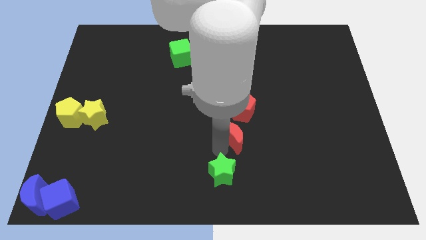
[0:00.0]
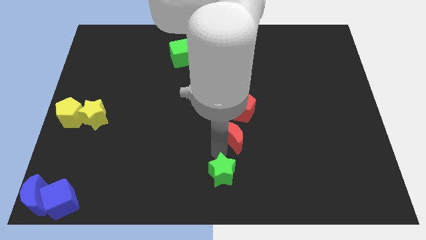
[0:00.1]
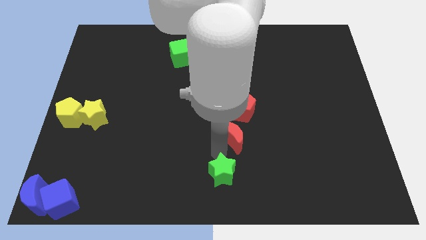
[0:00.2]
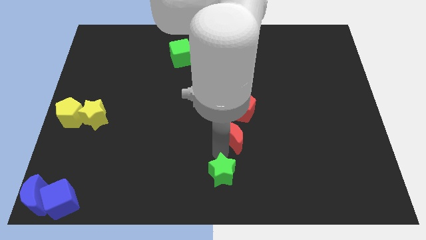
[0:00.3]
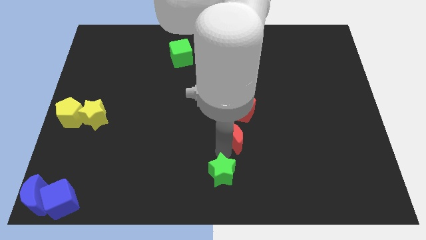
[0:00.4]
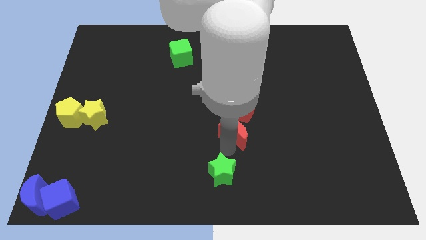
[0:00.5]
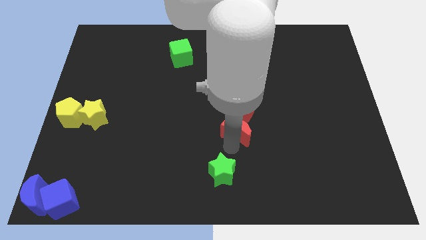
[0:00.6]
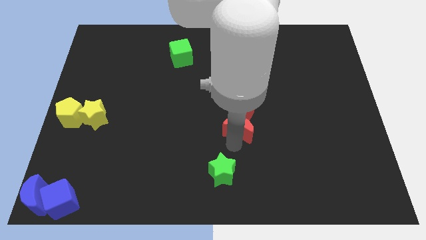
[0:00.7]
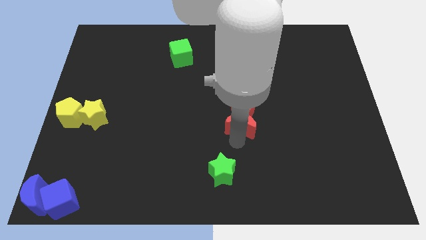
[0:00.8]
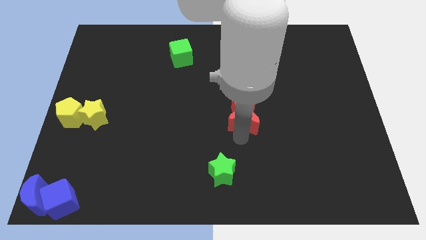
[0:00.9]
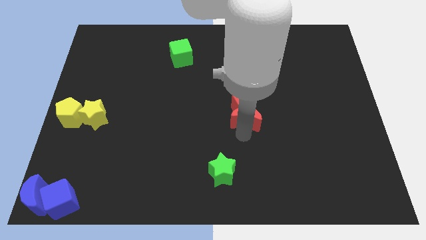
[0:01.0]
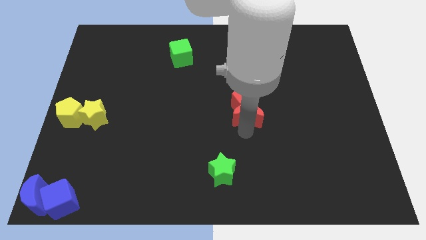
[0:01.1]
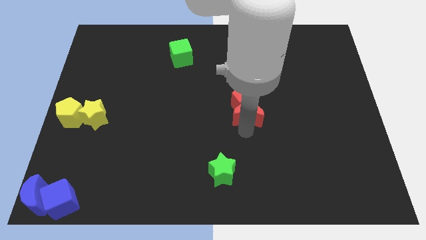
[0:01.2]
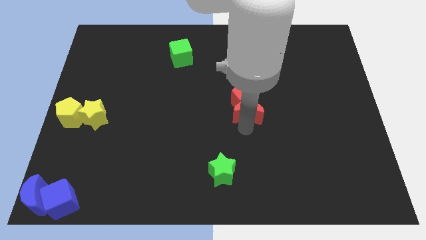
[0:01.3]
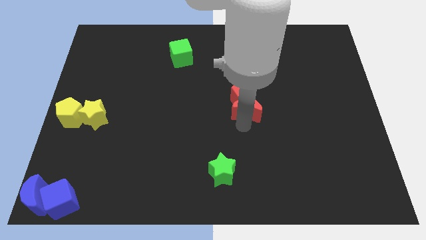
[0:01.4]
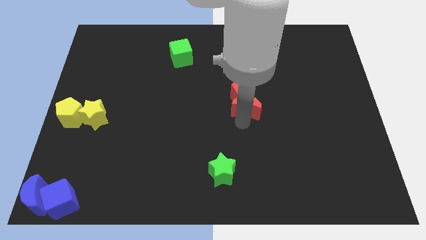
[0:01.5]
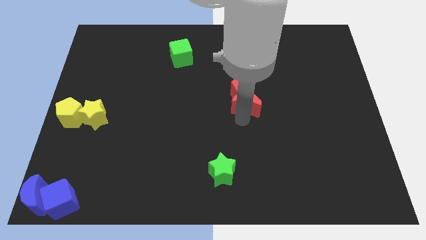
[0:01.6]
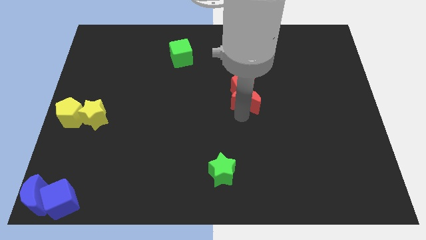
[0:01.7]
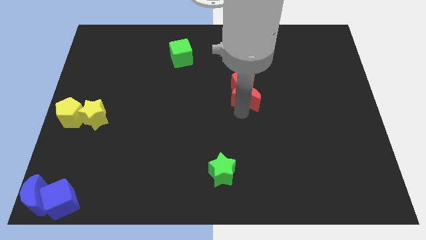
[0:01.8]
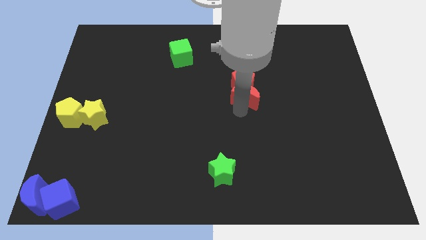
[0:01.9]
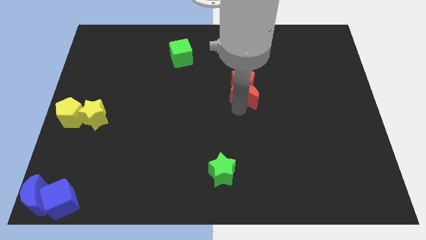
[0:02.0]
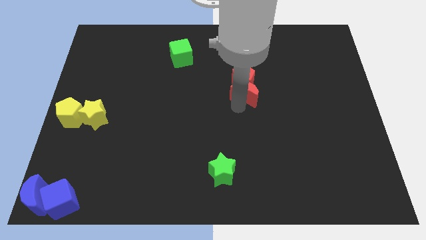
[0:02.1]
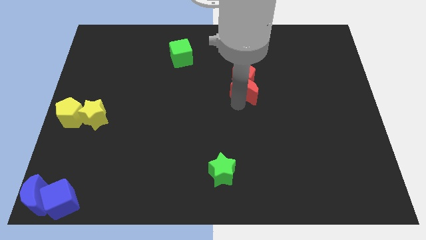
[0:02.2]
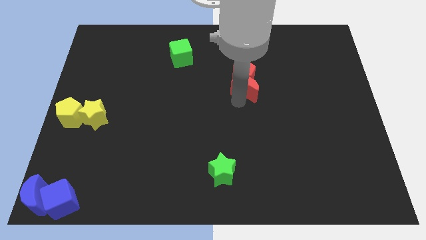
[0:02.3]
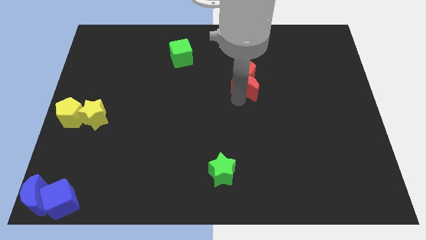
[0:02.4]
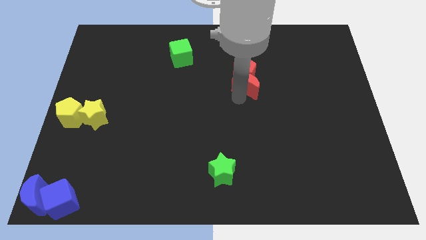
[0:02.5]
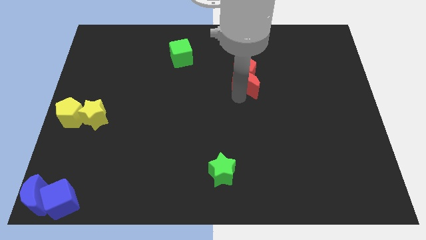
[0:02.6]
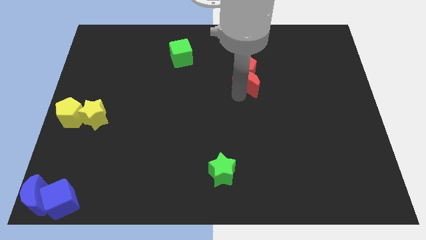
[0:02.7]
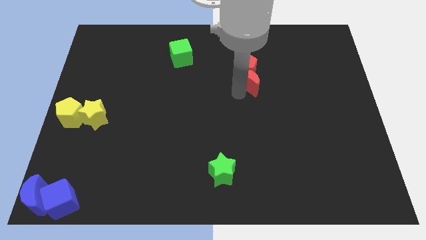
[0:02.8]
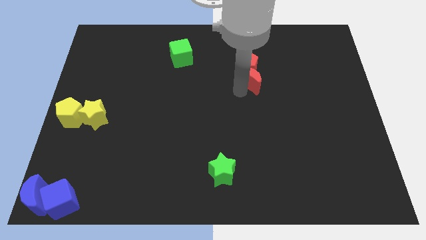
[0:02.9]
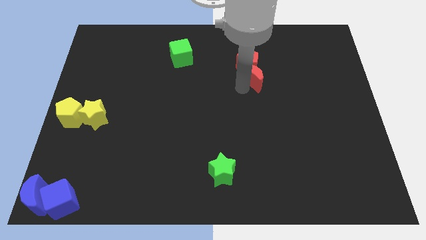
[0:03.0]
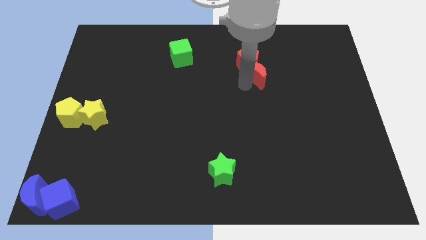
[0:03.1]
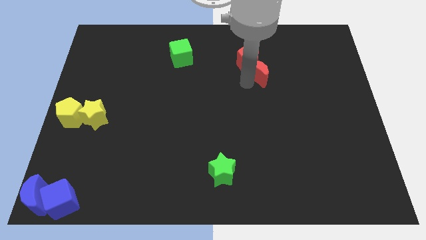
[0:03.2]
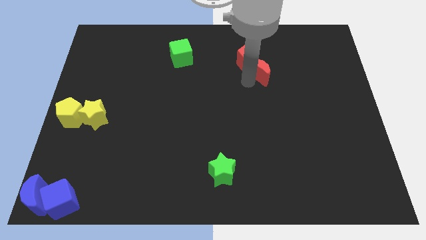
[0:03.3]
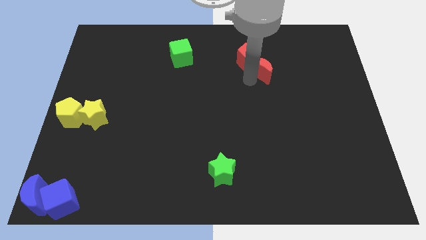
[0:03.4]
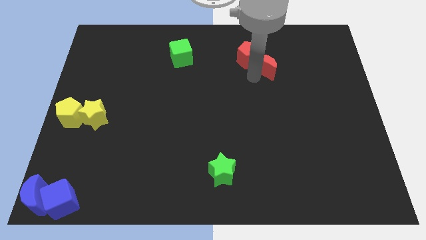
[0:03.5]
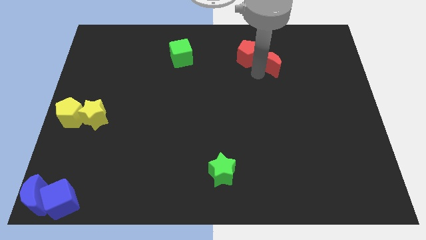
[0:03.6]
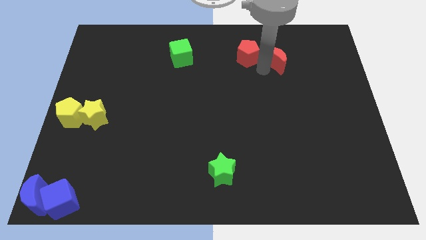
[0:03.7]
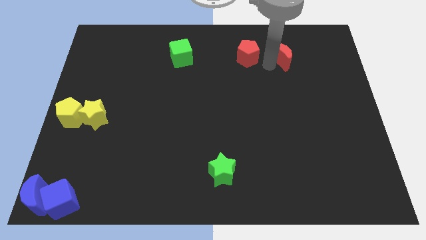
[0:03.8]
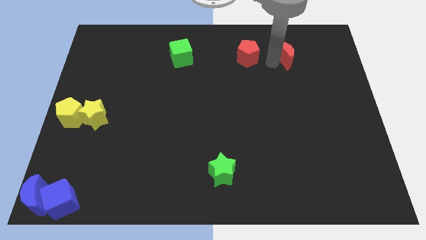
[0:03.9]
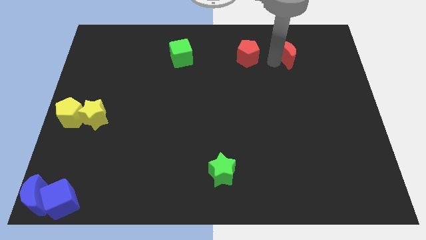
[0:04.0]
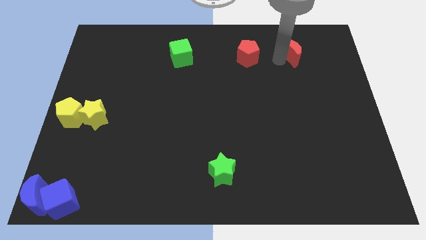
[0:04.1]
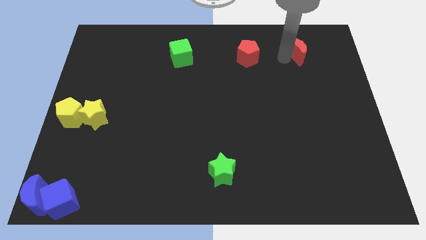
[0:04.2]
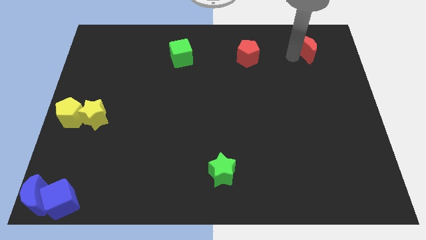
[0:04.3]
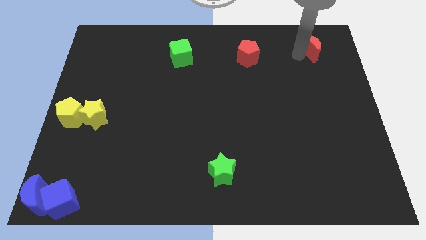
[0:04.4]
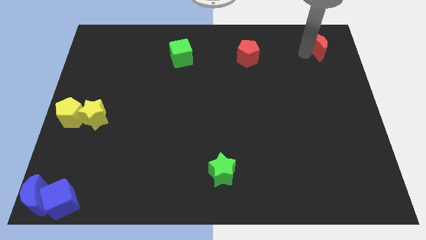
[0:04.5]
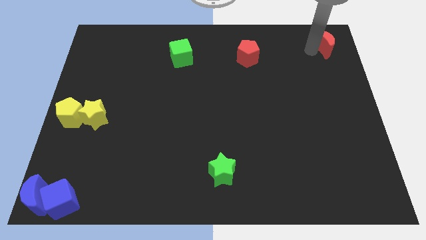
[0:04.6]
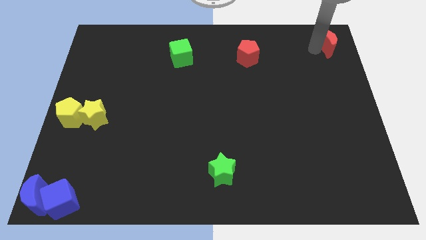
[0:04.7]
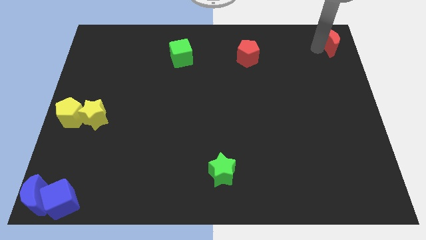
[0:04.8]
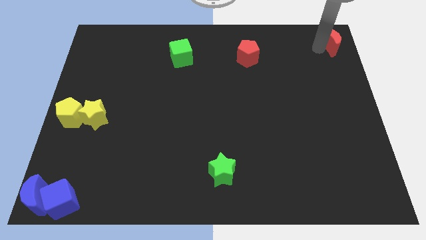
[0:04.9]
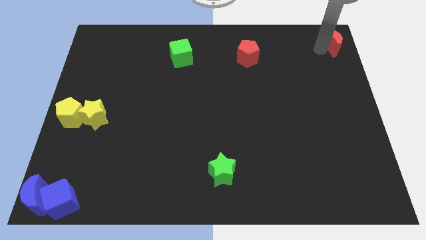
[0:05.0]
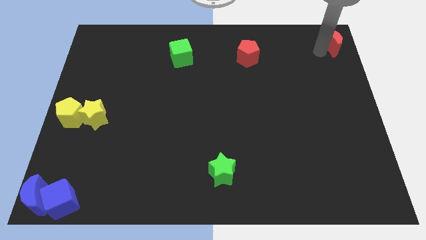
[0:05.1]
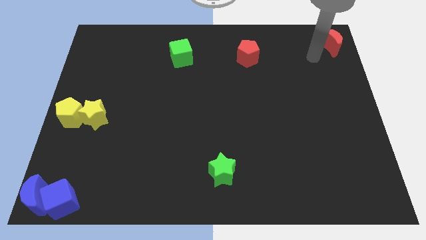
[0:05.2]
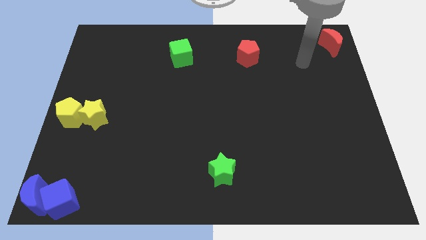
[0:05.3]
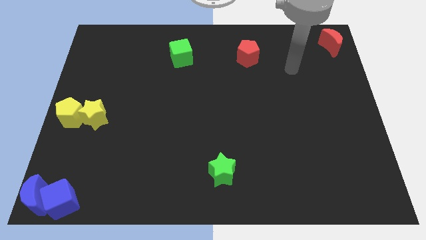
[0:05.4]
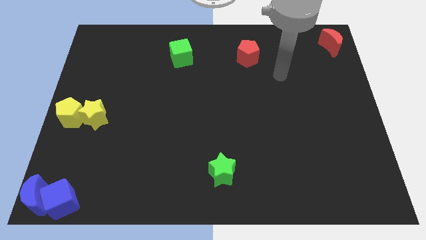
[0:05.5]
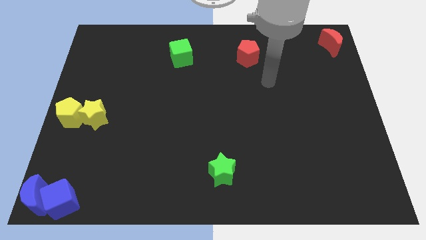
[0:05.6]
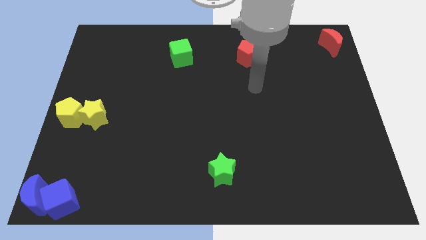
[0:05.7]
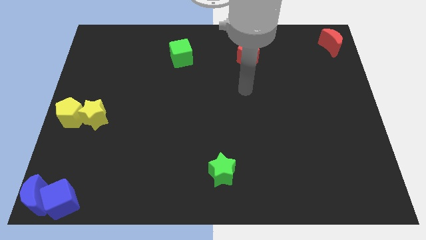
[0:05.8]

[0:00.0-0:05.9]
separate the red moon from red pentagon towards the top right

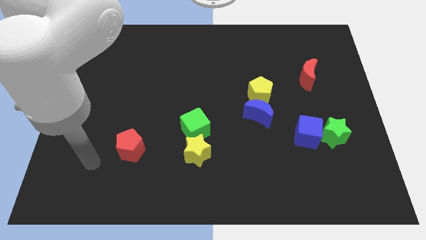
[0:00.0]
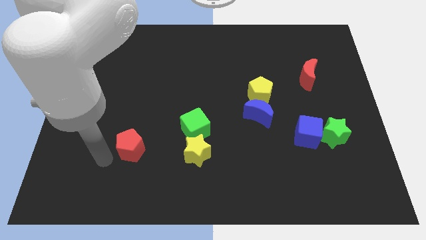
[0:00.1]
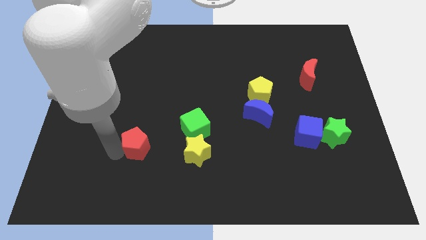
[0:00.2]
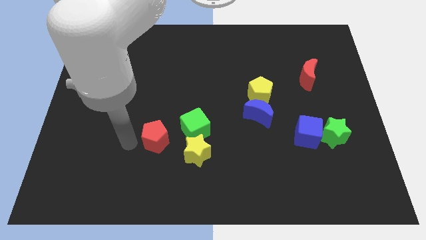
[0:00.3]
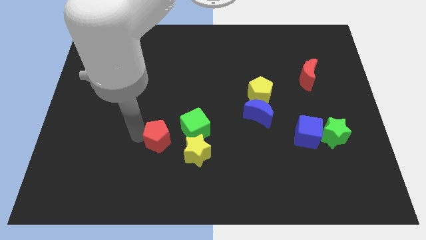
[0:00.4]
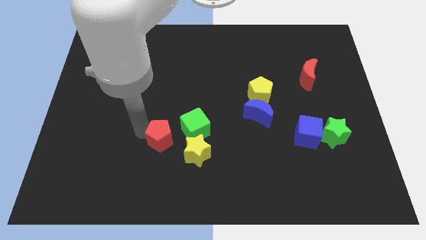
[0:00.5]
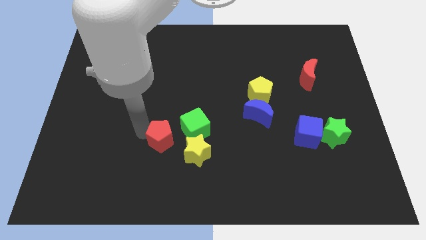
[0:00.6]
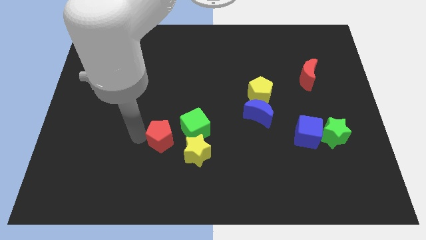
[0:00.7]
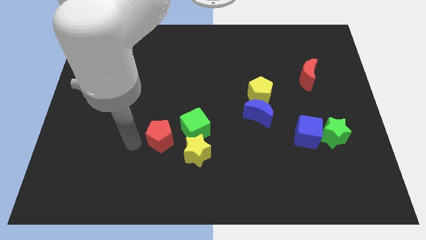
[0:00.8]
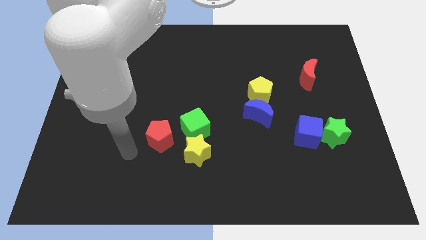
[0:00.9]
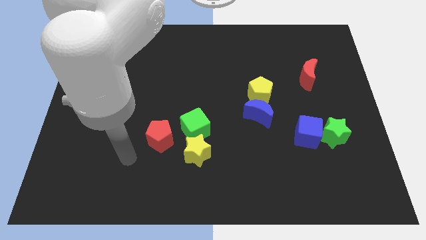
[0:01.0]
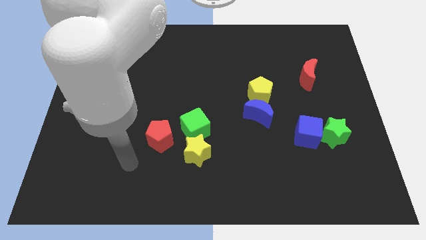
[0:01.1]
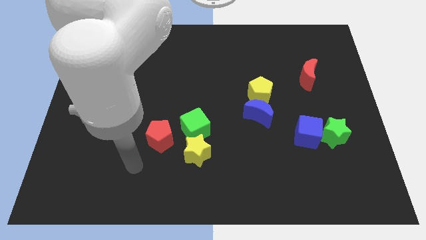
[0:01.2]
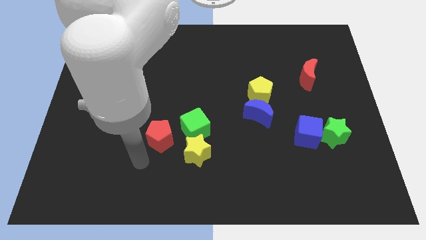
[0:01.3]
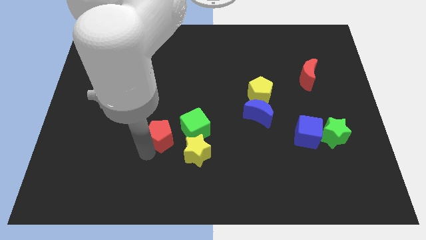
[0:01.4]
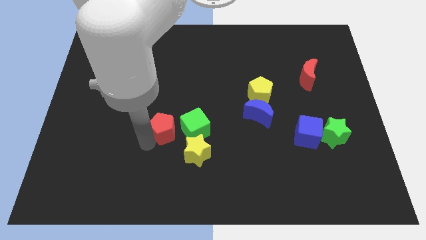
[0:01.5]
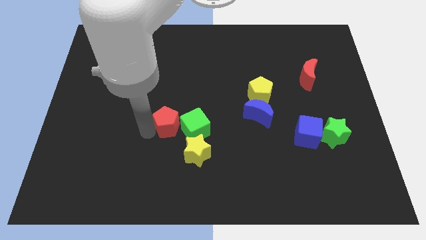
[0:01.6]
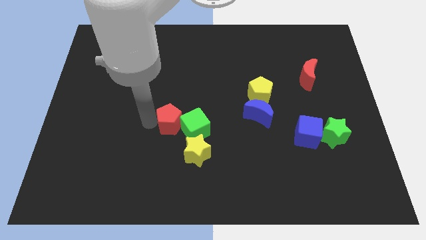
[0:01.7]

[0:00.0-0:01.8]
place the red pentagon parallel left to the green cube

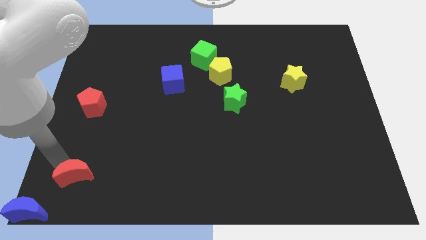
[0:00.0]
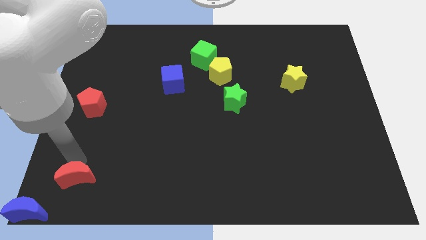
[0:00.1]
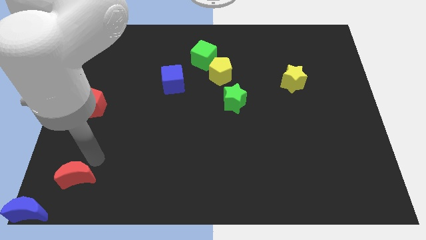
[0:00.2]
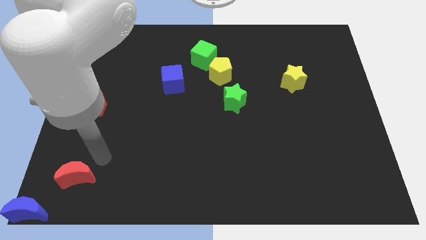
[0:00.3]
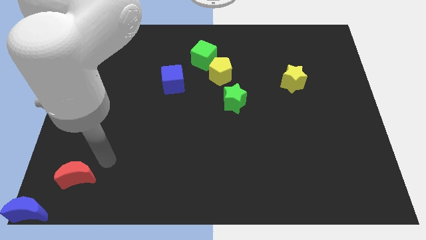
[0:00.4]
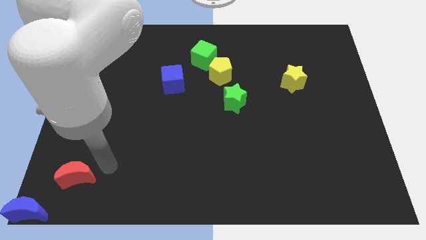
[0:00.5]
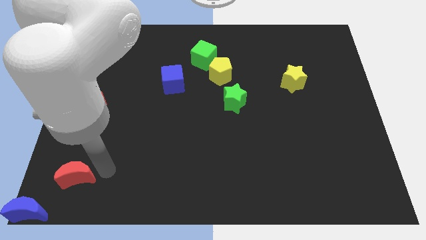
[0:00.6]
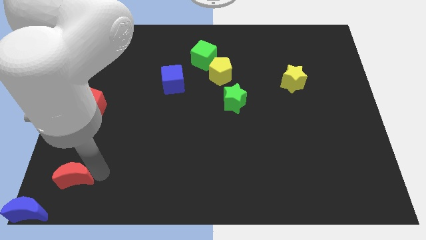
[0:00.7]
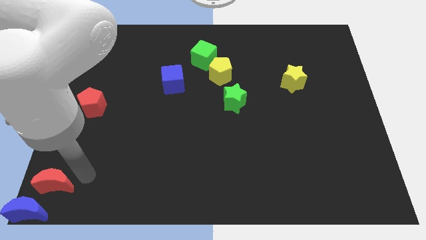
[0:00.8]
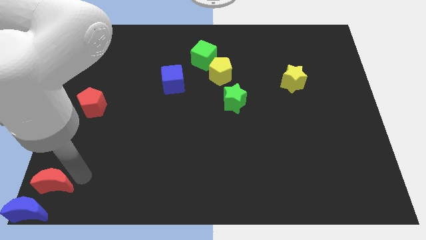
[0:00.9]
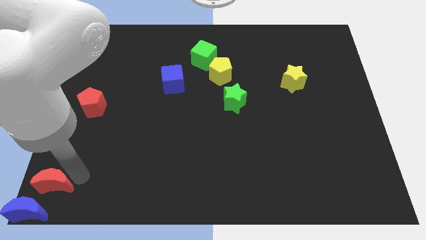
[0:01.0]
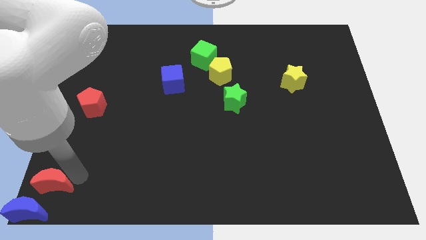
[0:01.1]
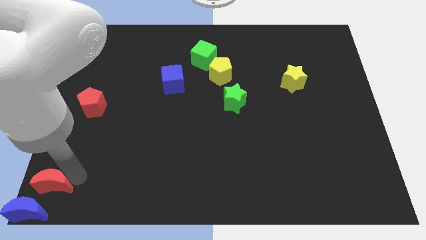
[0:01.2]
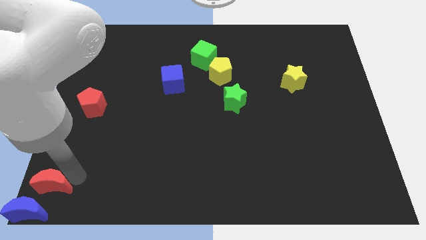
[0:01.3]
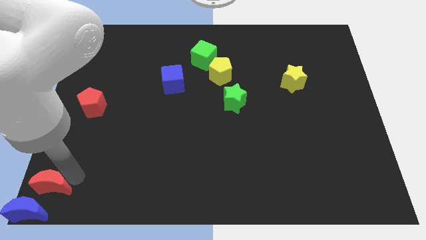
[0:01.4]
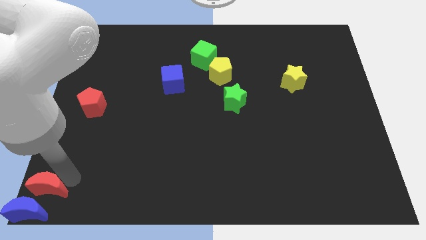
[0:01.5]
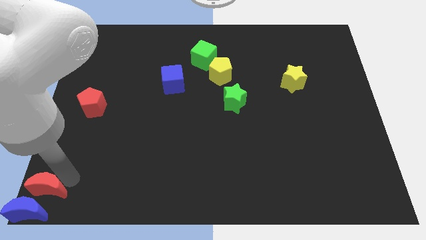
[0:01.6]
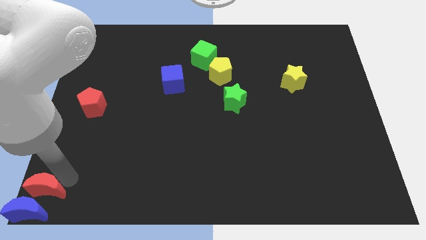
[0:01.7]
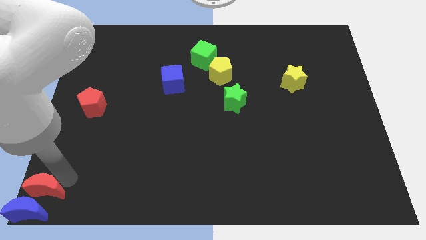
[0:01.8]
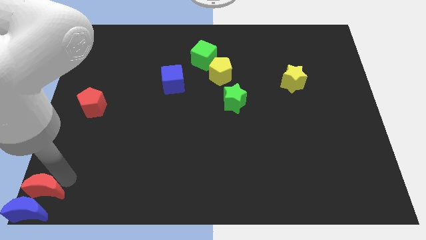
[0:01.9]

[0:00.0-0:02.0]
push the red crescent to the top of the blue crescent to the bottom left of the board
